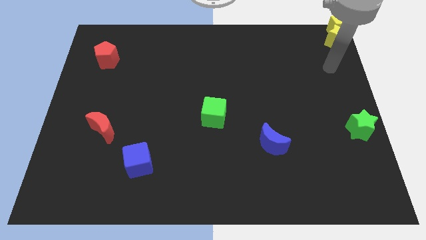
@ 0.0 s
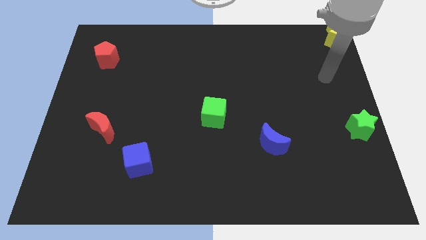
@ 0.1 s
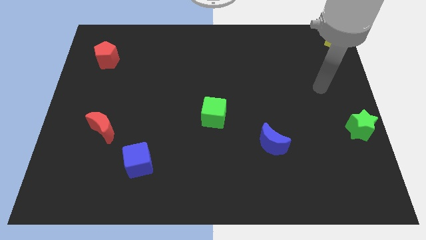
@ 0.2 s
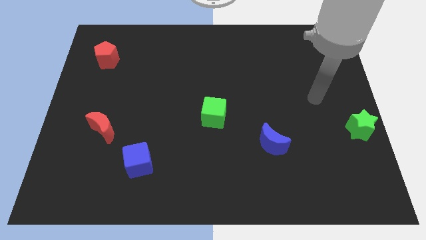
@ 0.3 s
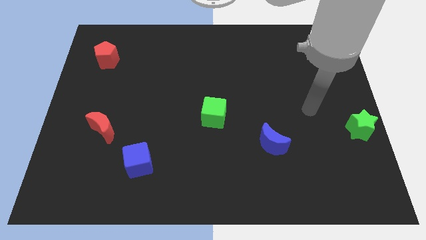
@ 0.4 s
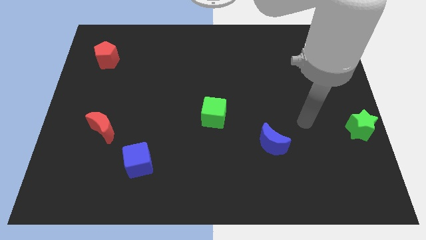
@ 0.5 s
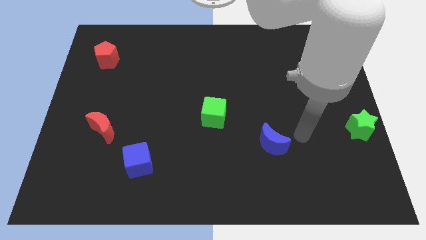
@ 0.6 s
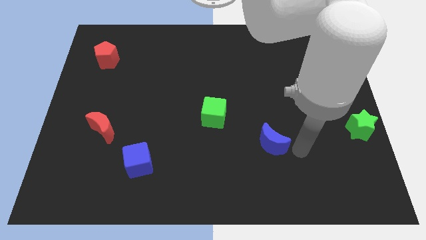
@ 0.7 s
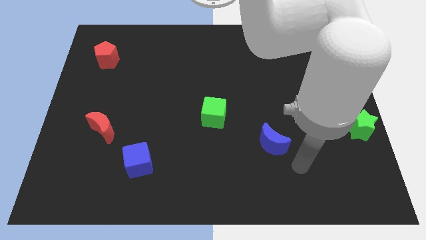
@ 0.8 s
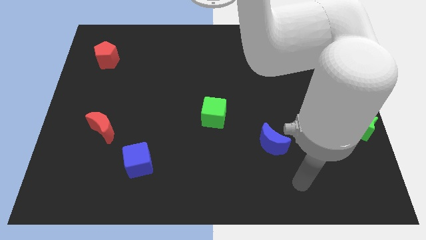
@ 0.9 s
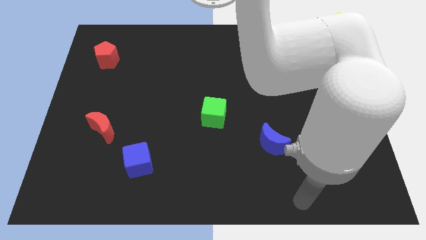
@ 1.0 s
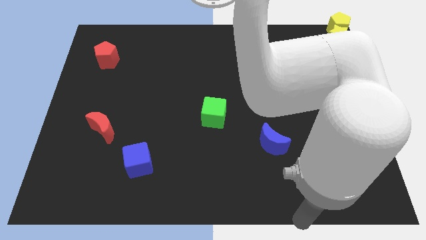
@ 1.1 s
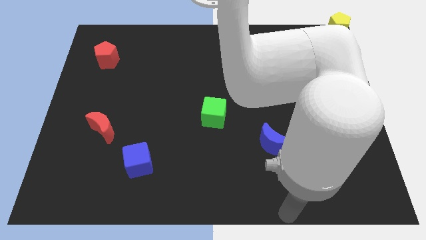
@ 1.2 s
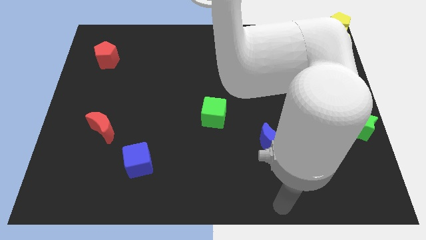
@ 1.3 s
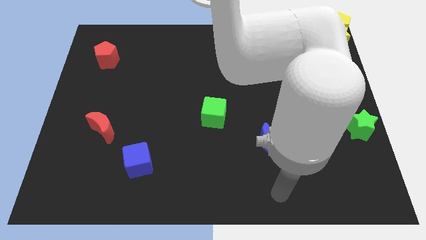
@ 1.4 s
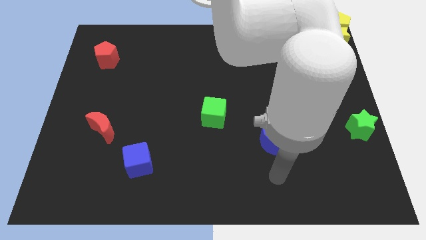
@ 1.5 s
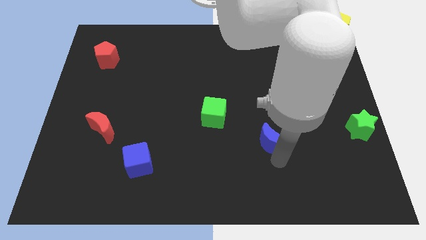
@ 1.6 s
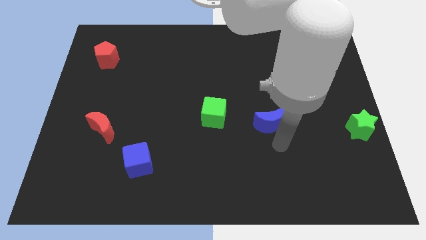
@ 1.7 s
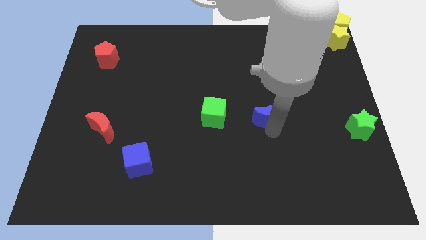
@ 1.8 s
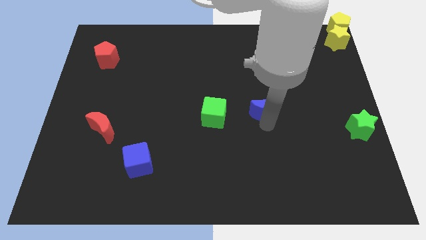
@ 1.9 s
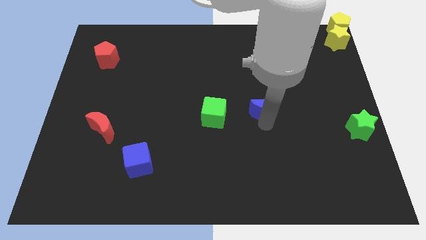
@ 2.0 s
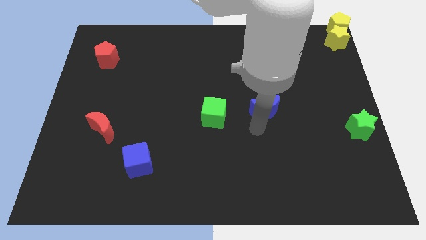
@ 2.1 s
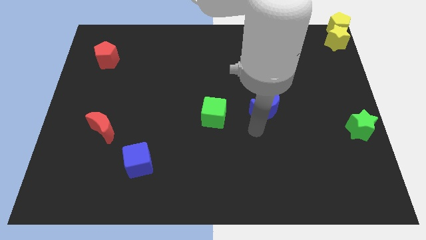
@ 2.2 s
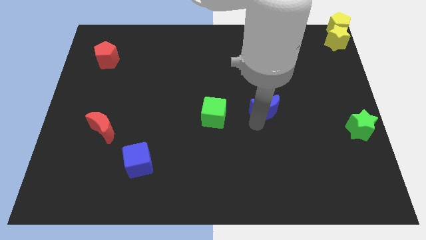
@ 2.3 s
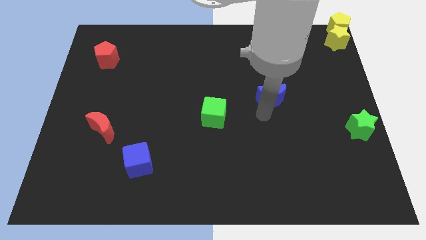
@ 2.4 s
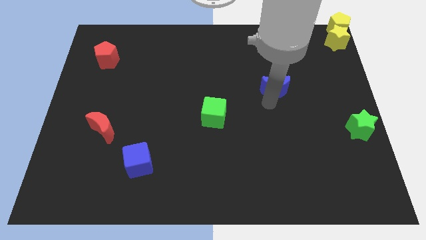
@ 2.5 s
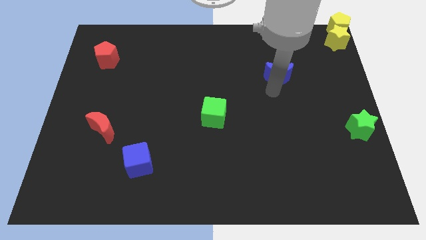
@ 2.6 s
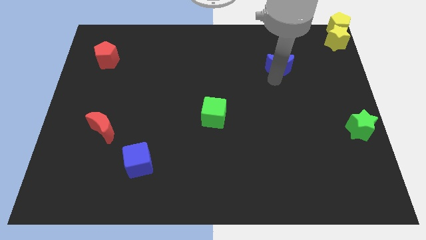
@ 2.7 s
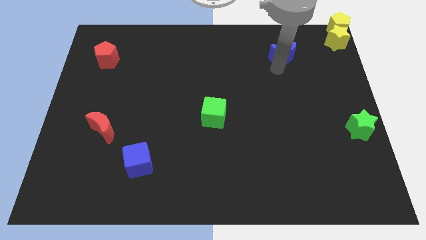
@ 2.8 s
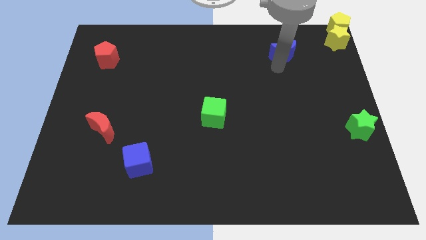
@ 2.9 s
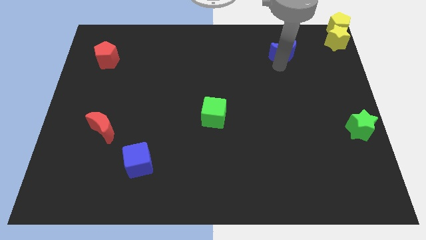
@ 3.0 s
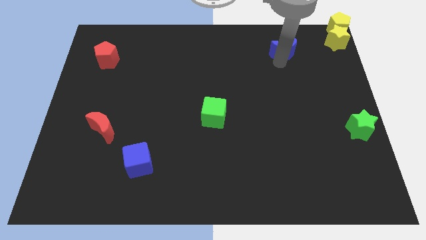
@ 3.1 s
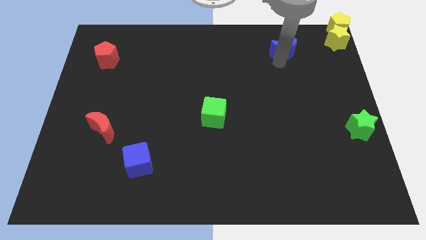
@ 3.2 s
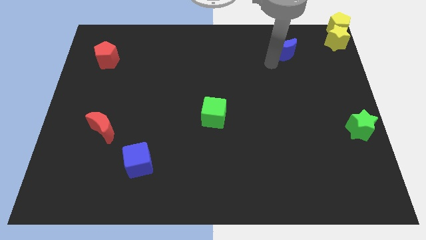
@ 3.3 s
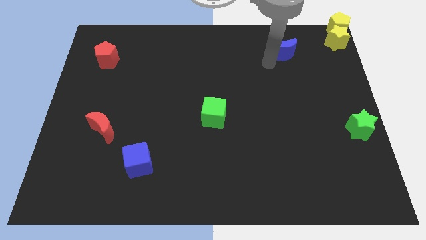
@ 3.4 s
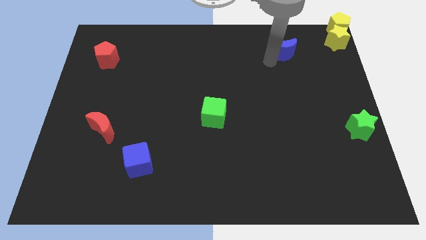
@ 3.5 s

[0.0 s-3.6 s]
push the blue moon upward

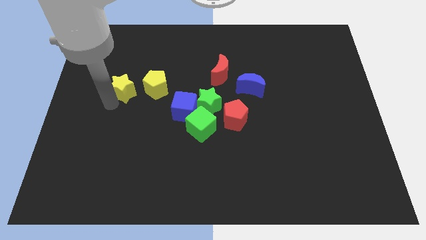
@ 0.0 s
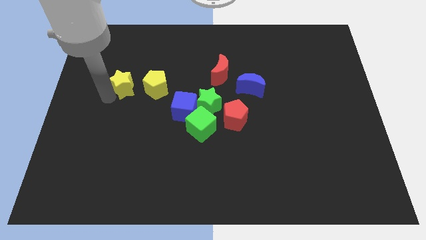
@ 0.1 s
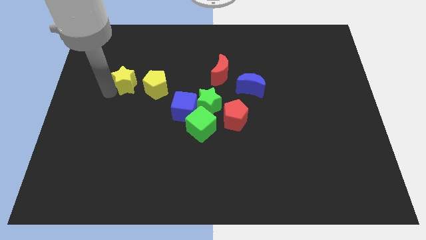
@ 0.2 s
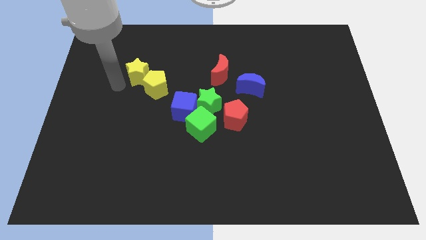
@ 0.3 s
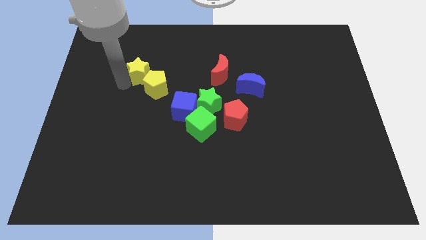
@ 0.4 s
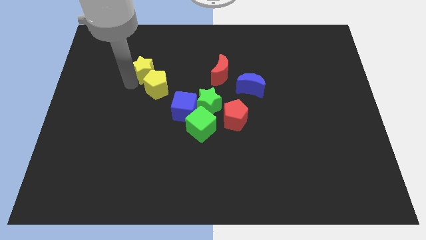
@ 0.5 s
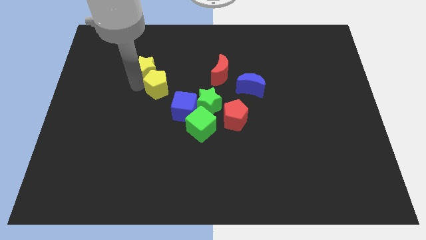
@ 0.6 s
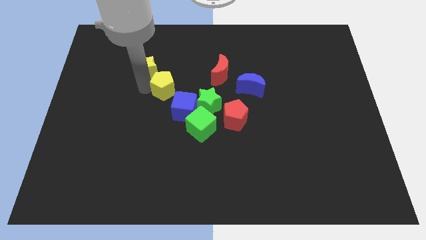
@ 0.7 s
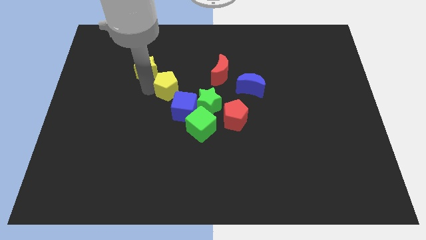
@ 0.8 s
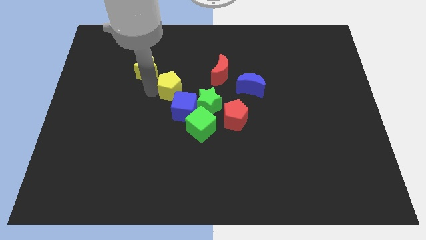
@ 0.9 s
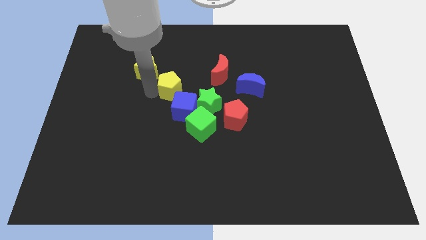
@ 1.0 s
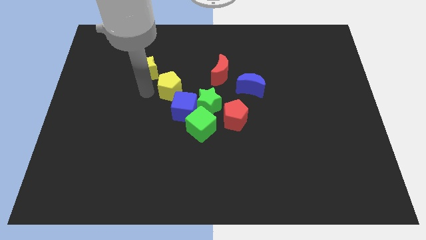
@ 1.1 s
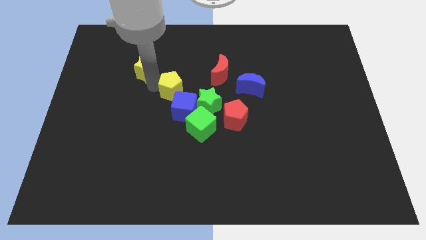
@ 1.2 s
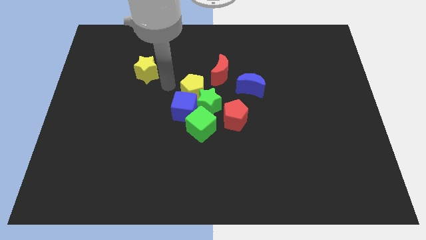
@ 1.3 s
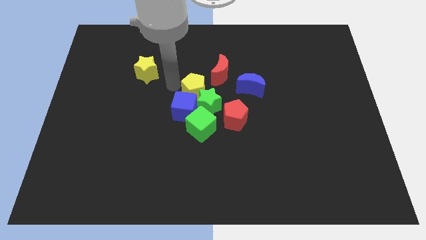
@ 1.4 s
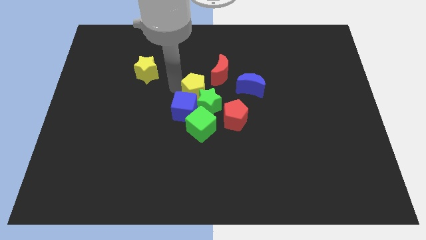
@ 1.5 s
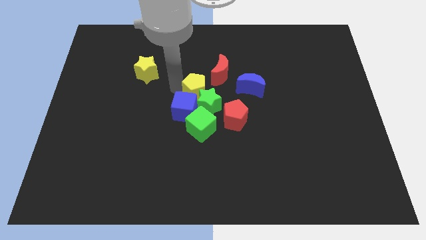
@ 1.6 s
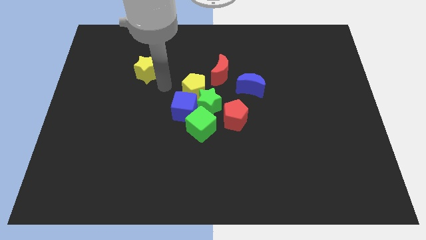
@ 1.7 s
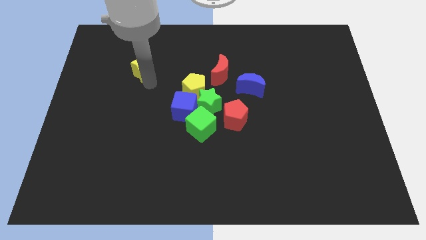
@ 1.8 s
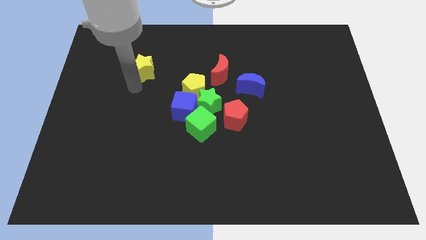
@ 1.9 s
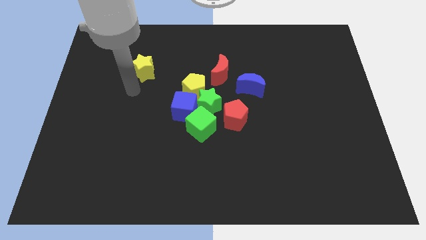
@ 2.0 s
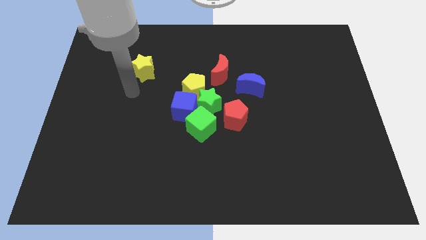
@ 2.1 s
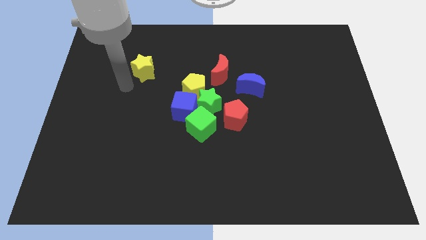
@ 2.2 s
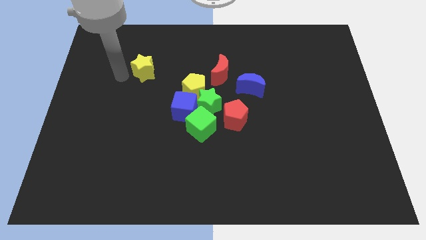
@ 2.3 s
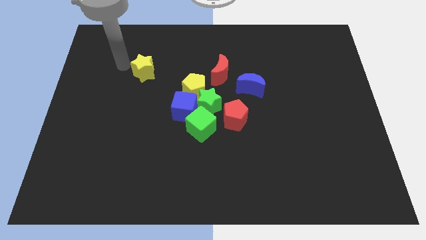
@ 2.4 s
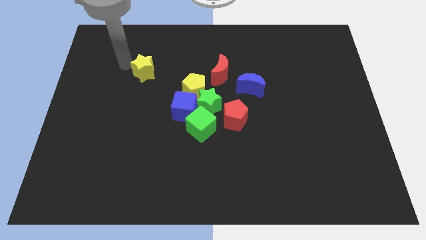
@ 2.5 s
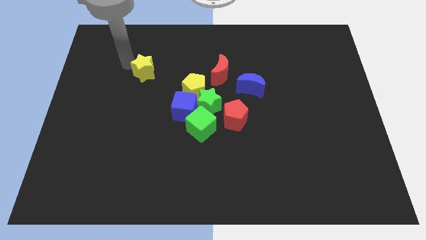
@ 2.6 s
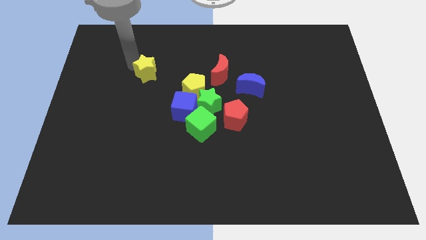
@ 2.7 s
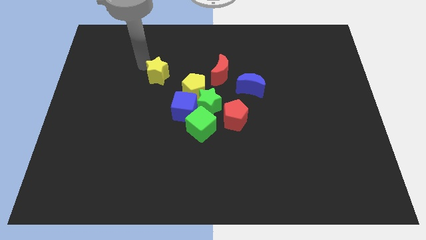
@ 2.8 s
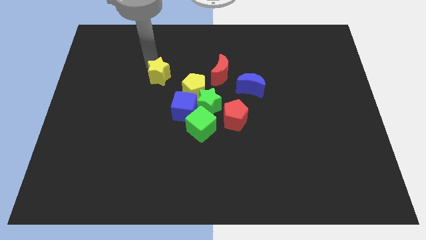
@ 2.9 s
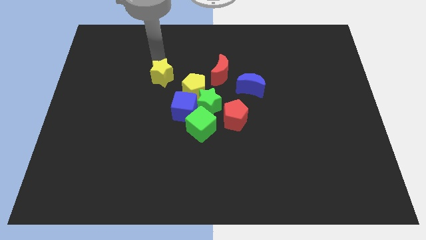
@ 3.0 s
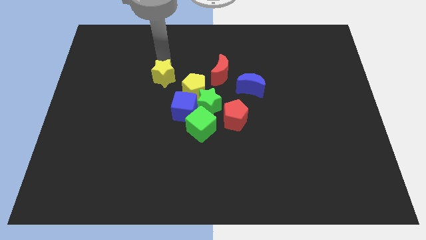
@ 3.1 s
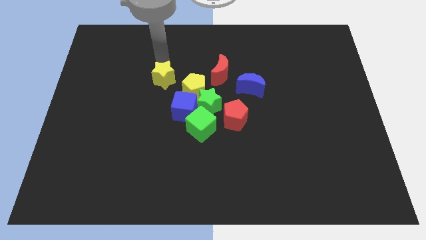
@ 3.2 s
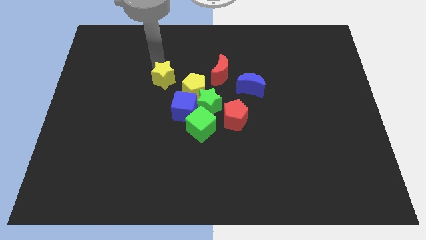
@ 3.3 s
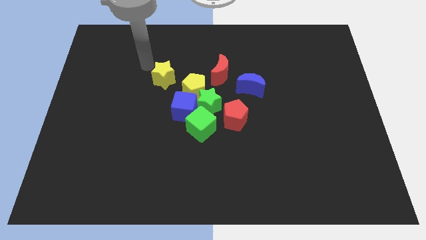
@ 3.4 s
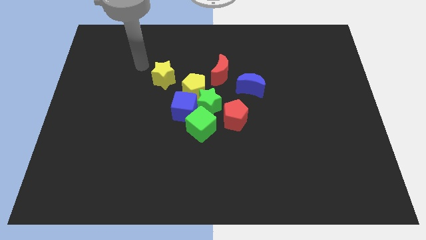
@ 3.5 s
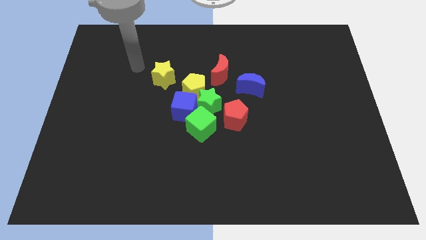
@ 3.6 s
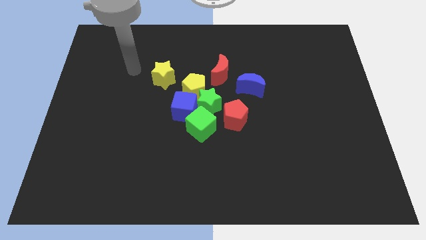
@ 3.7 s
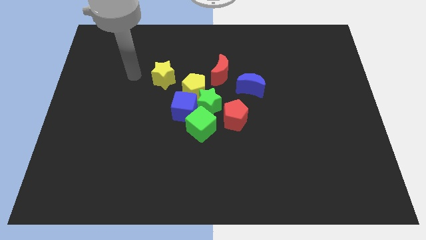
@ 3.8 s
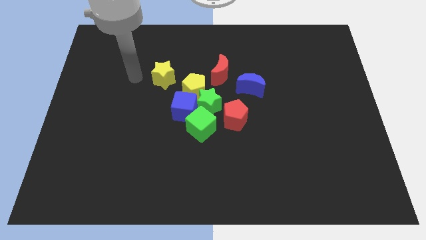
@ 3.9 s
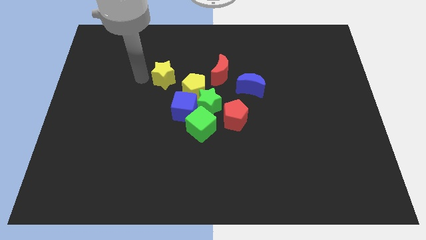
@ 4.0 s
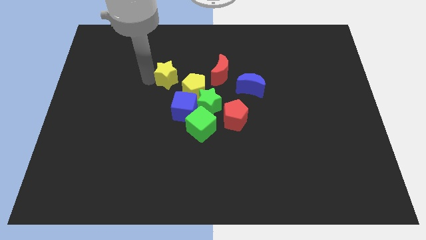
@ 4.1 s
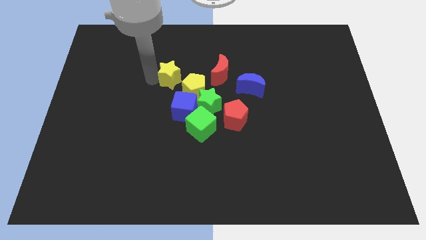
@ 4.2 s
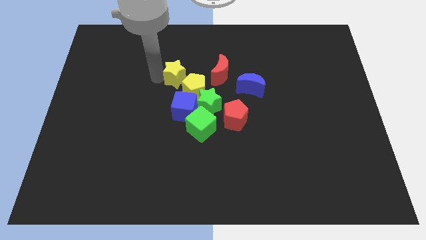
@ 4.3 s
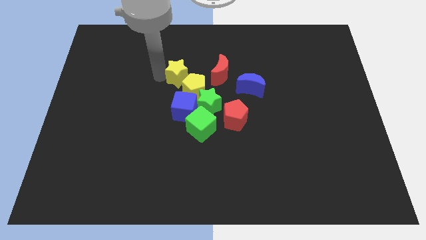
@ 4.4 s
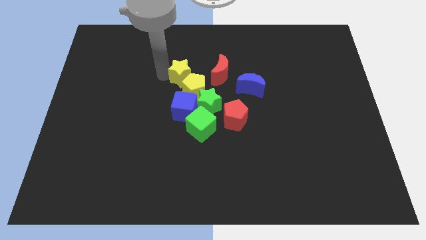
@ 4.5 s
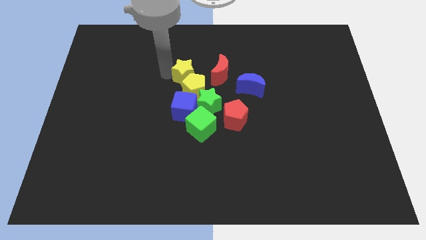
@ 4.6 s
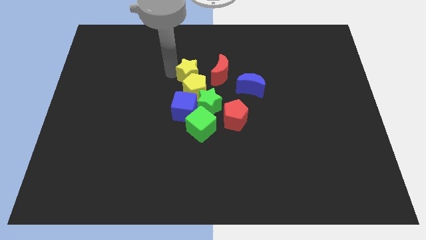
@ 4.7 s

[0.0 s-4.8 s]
place the yellow star and yellow pentagon above the blue cube

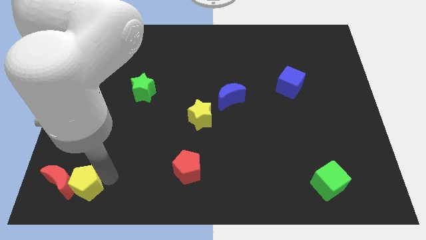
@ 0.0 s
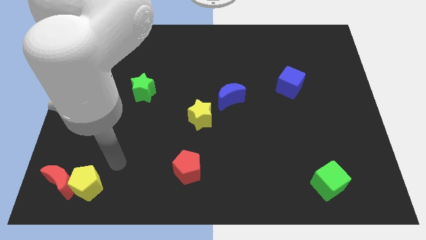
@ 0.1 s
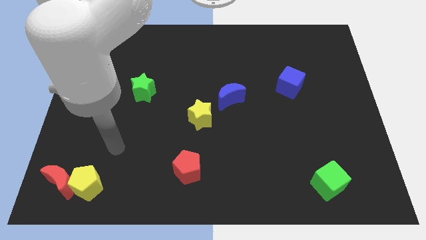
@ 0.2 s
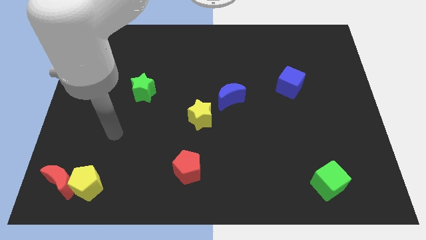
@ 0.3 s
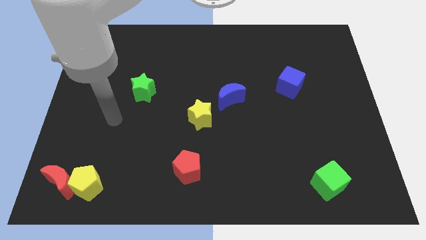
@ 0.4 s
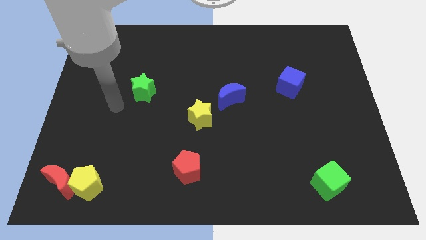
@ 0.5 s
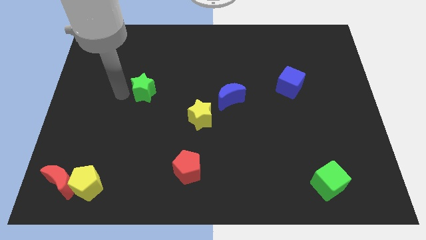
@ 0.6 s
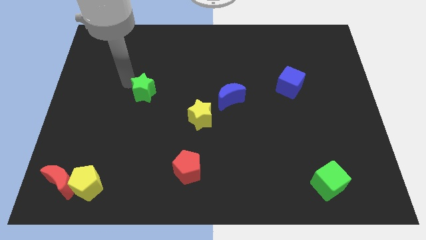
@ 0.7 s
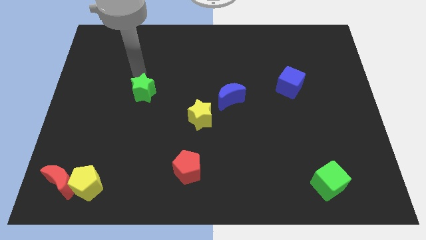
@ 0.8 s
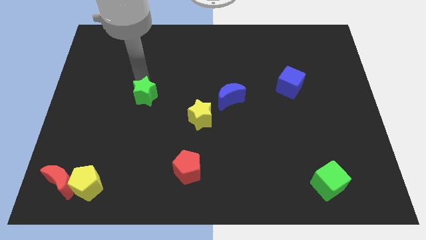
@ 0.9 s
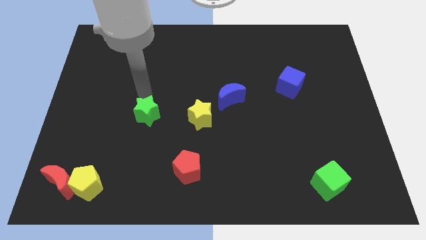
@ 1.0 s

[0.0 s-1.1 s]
push the green star to the left of the yellow star
